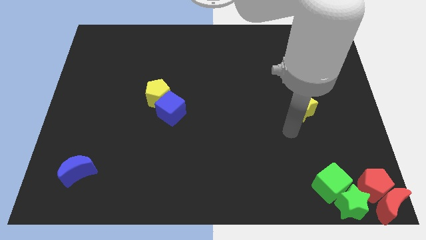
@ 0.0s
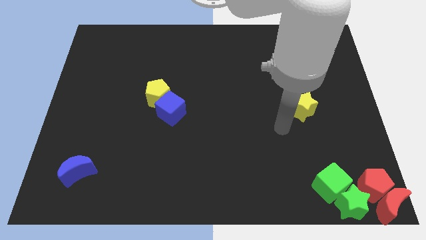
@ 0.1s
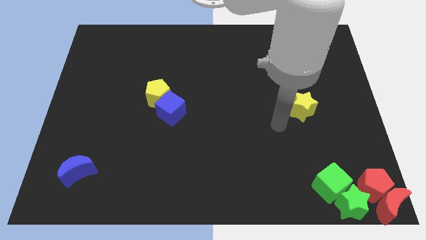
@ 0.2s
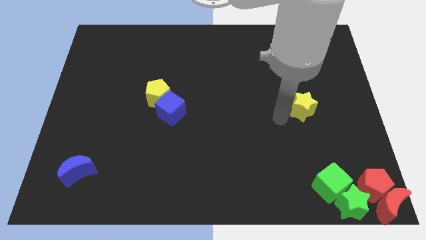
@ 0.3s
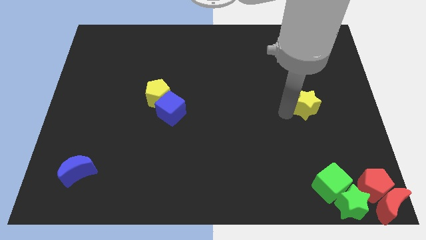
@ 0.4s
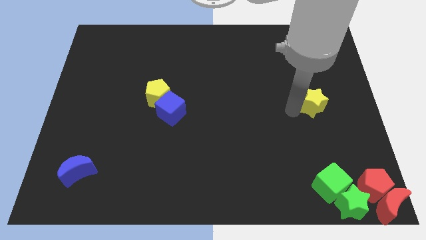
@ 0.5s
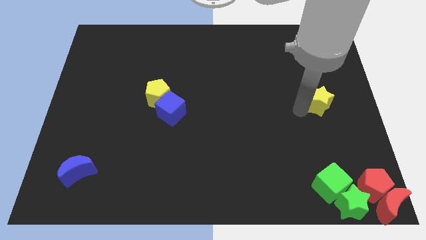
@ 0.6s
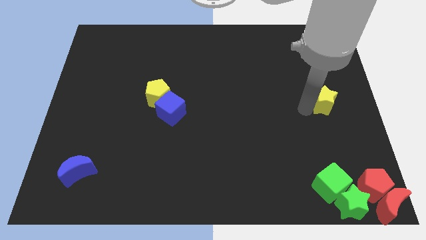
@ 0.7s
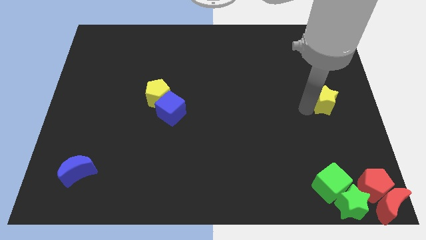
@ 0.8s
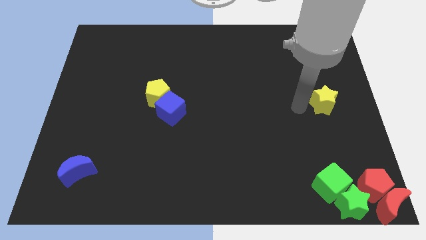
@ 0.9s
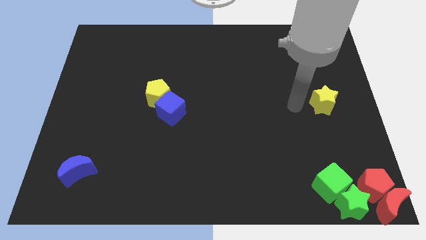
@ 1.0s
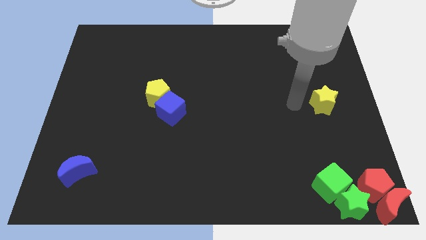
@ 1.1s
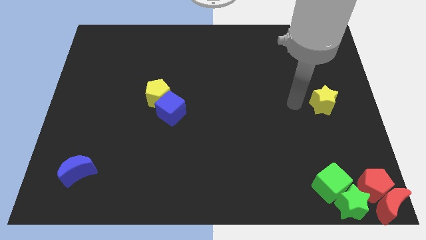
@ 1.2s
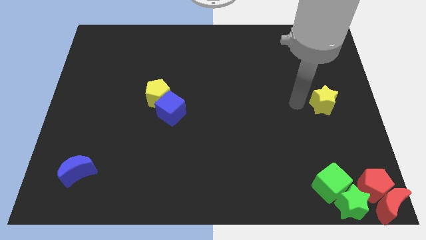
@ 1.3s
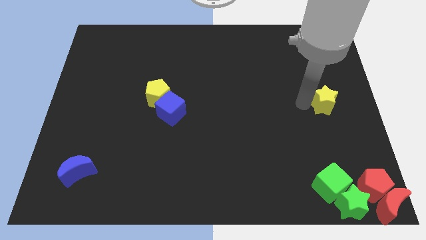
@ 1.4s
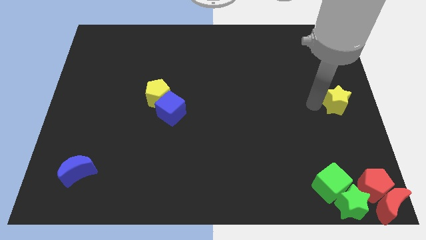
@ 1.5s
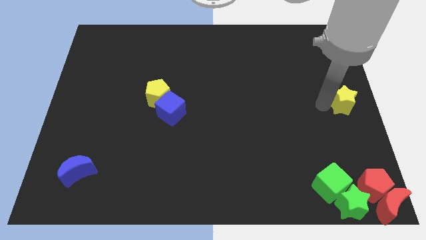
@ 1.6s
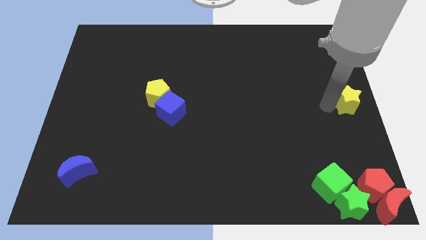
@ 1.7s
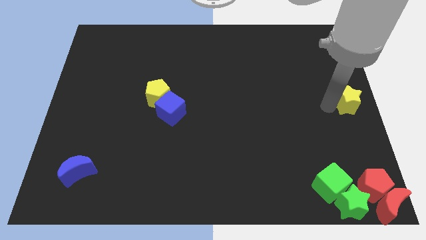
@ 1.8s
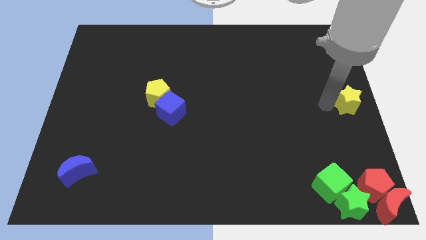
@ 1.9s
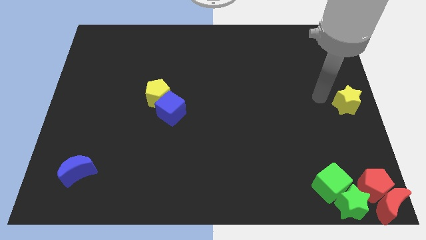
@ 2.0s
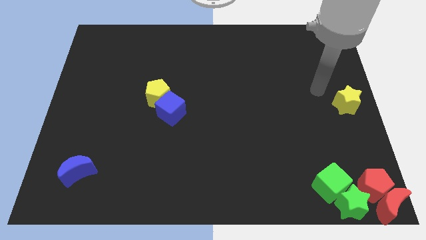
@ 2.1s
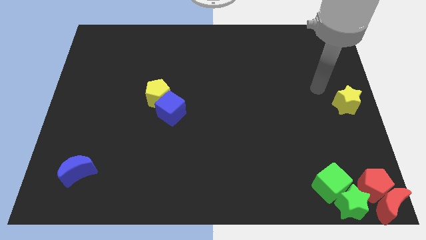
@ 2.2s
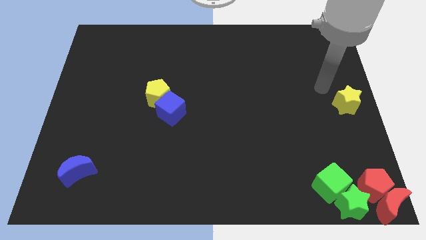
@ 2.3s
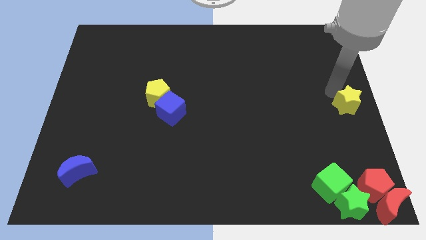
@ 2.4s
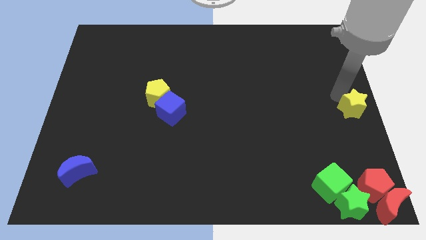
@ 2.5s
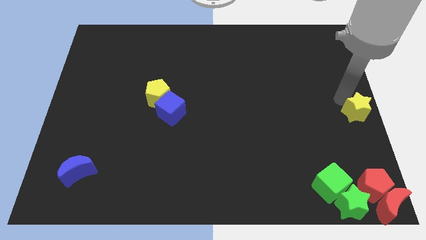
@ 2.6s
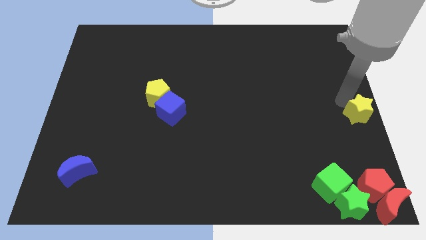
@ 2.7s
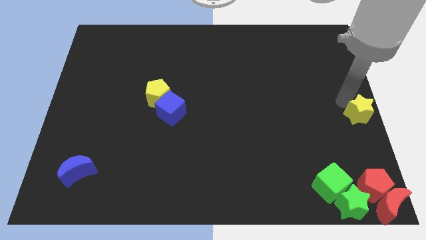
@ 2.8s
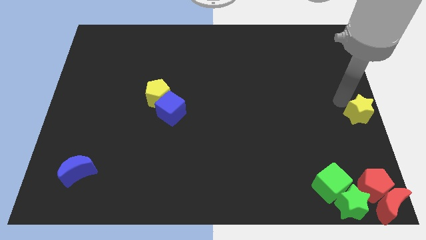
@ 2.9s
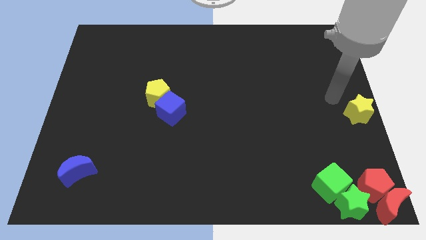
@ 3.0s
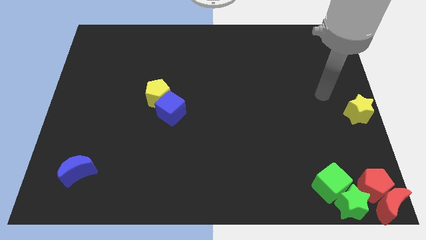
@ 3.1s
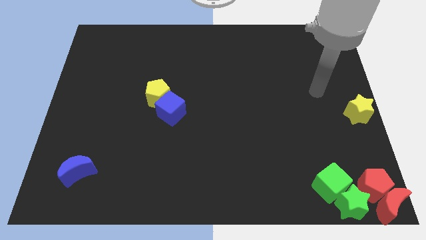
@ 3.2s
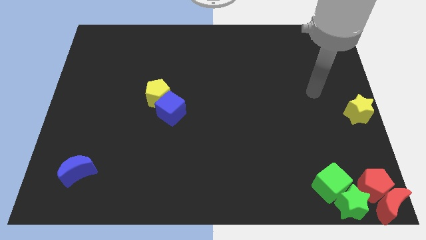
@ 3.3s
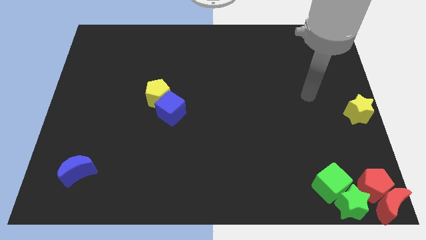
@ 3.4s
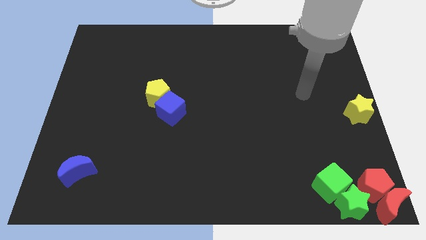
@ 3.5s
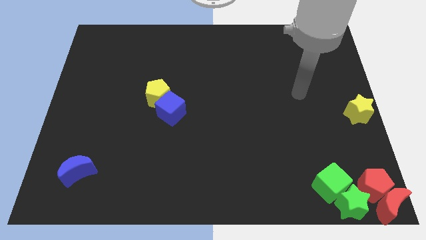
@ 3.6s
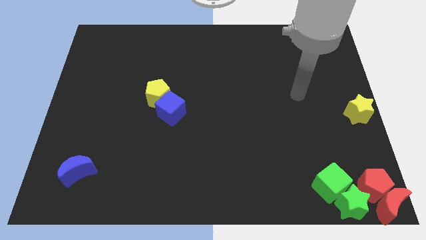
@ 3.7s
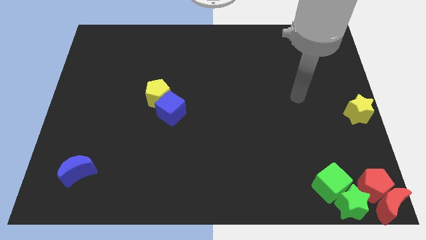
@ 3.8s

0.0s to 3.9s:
move the yellow star towards the center right side of the board

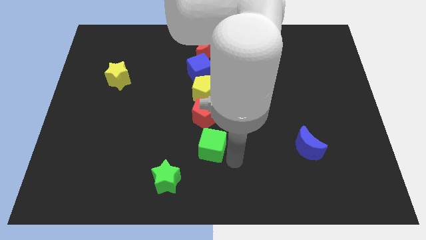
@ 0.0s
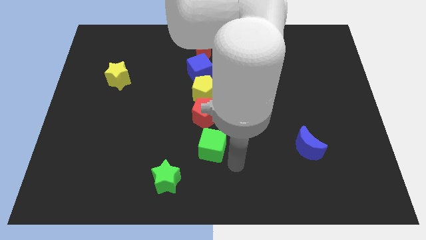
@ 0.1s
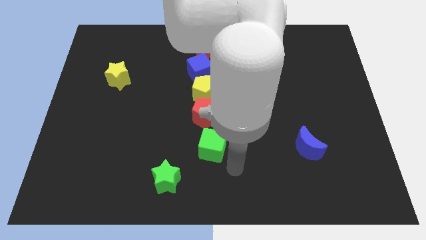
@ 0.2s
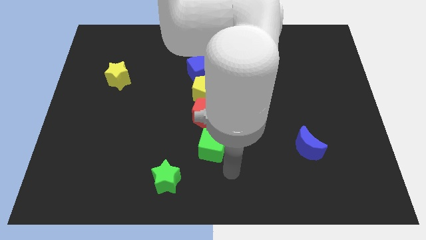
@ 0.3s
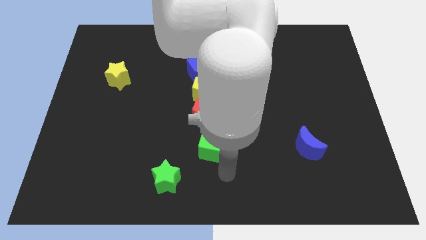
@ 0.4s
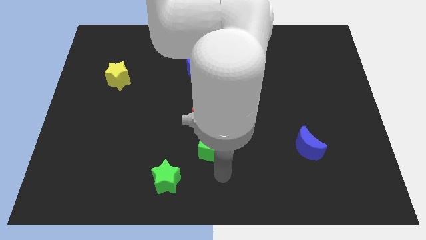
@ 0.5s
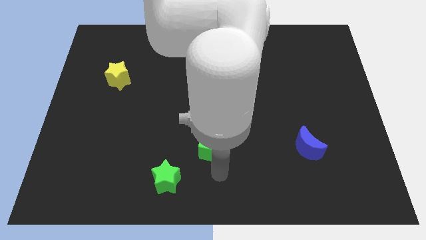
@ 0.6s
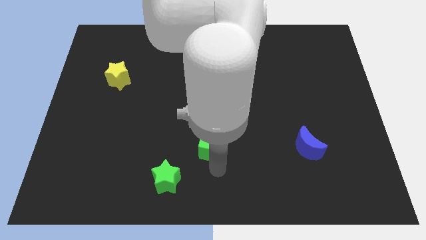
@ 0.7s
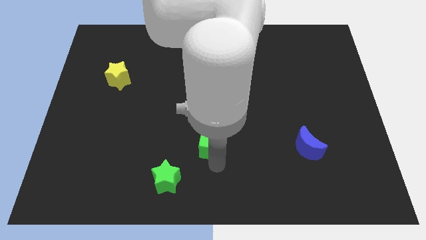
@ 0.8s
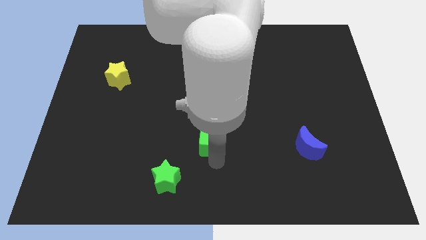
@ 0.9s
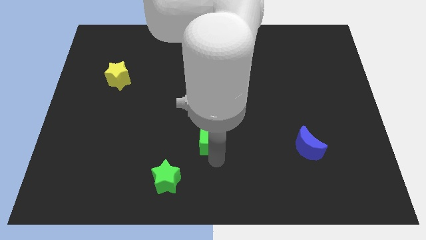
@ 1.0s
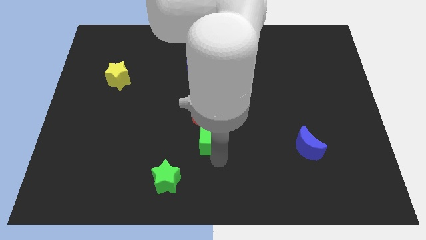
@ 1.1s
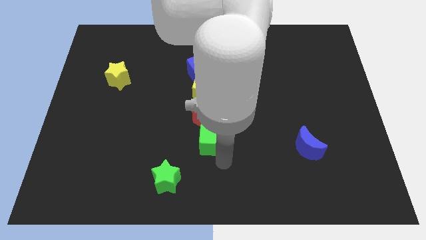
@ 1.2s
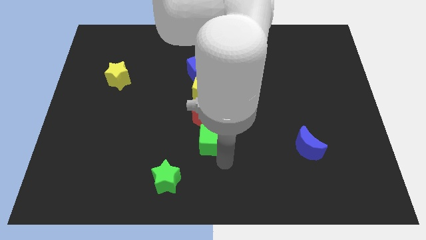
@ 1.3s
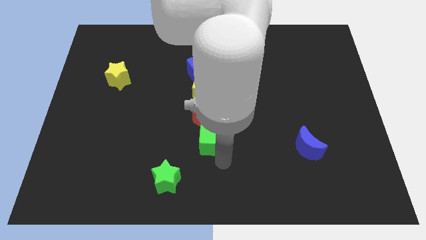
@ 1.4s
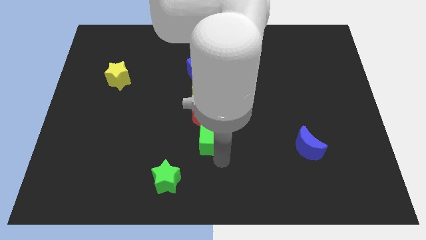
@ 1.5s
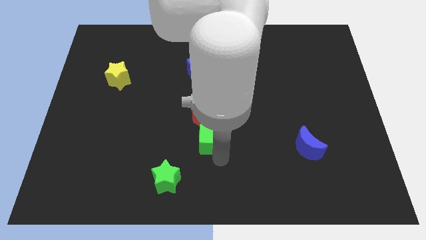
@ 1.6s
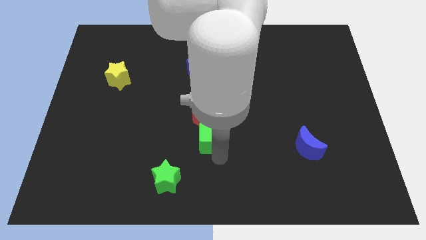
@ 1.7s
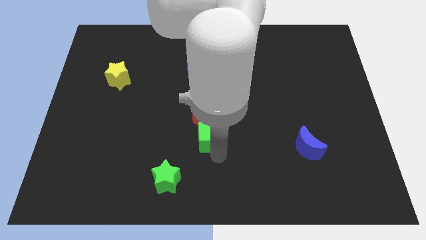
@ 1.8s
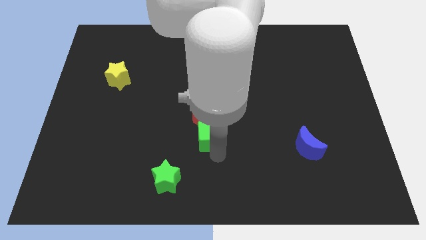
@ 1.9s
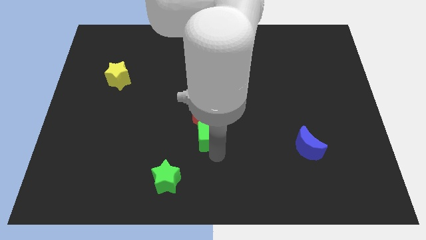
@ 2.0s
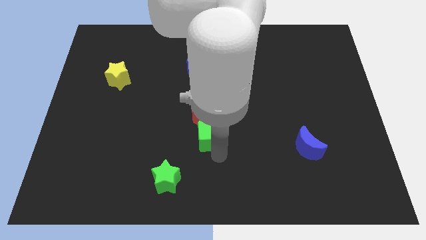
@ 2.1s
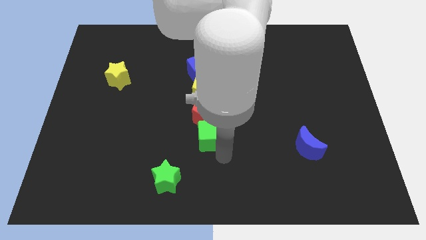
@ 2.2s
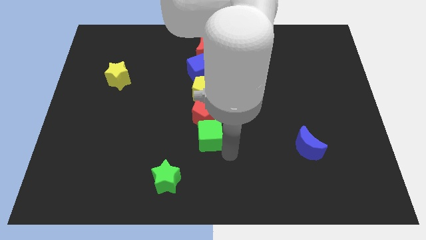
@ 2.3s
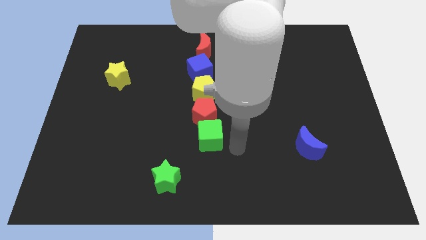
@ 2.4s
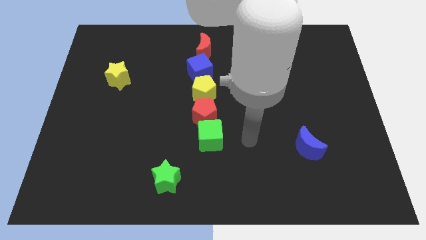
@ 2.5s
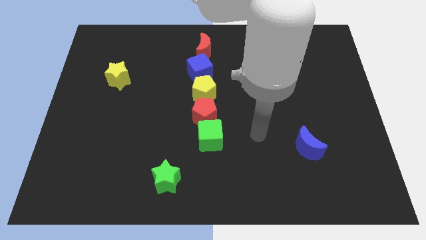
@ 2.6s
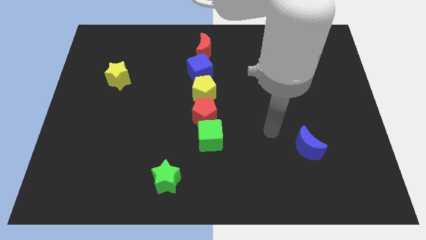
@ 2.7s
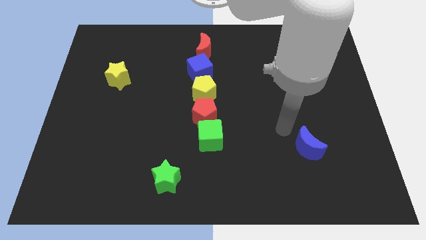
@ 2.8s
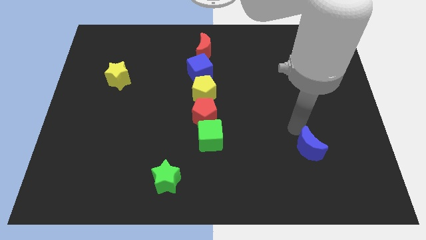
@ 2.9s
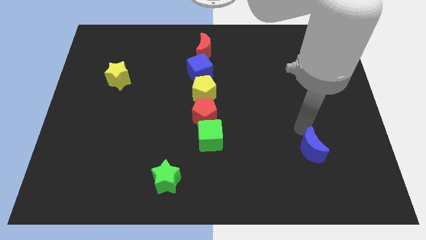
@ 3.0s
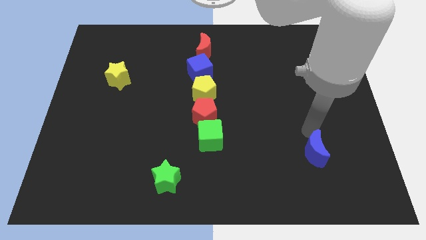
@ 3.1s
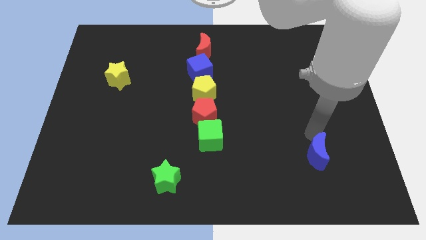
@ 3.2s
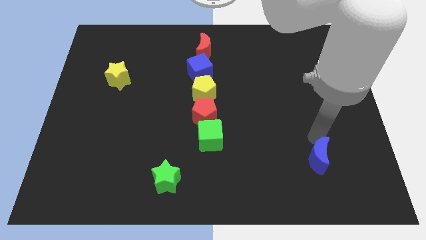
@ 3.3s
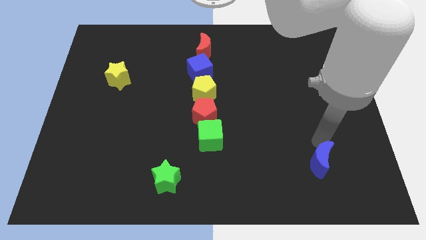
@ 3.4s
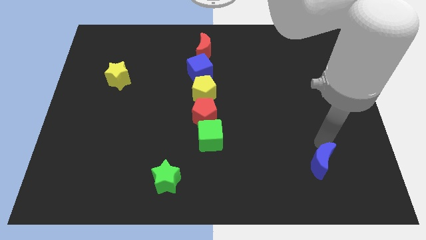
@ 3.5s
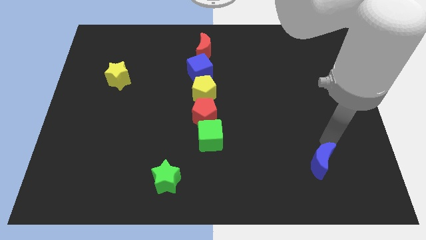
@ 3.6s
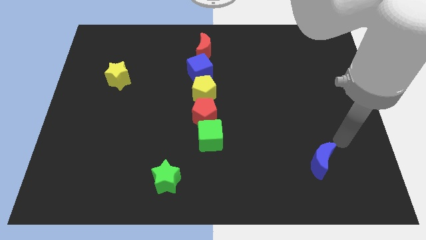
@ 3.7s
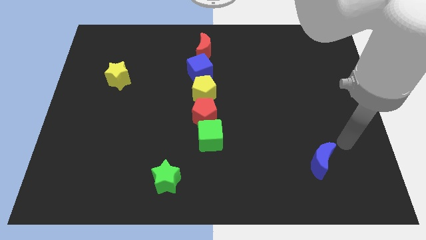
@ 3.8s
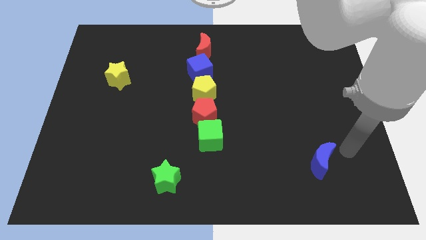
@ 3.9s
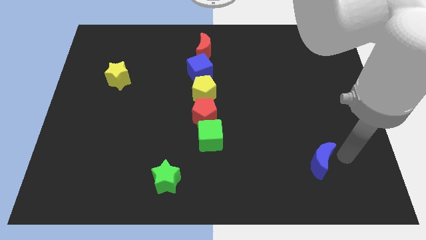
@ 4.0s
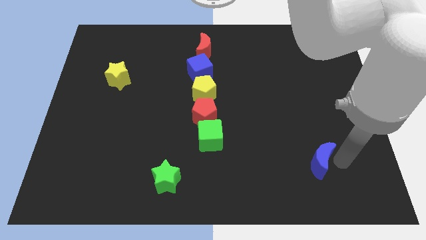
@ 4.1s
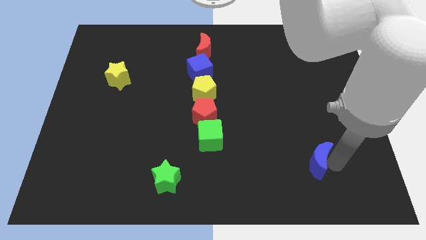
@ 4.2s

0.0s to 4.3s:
push the green cube close to the red pentagon

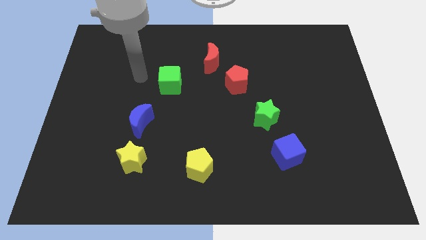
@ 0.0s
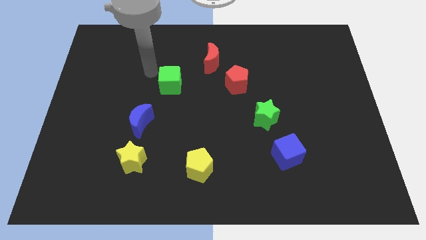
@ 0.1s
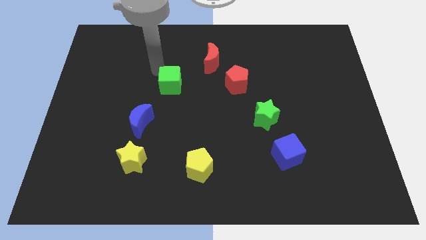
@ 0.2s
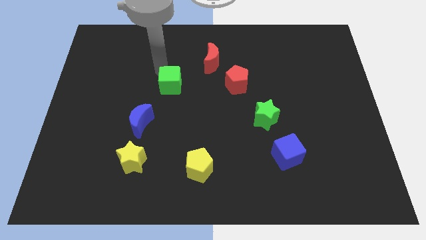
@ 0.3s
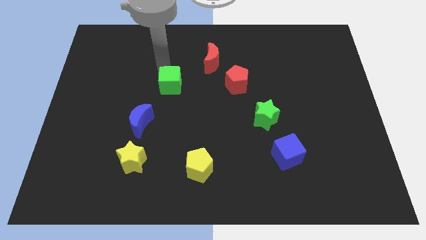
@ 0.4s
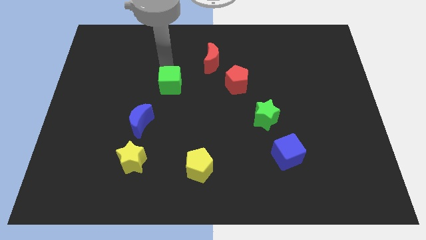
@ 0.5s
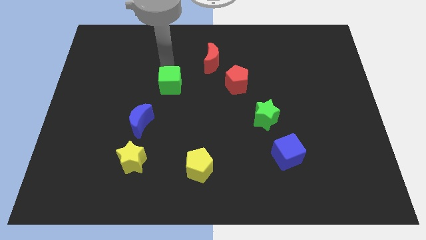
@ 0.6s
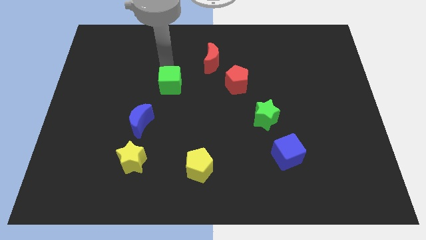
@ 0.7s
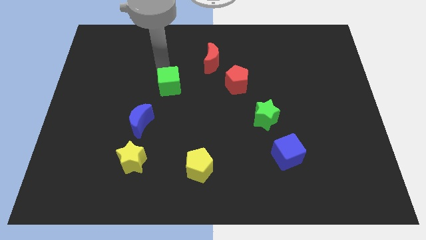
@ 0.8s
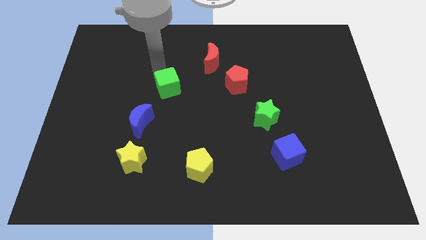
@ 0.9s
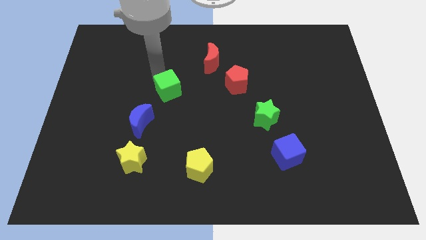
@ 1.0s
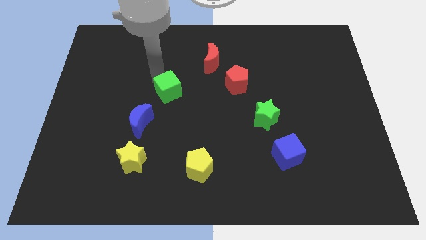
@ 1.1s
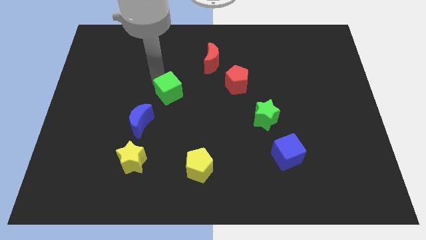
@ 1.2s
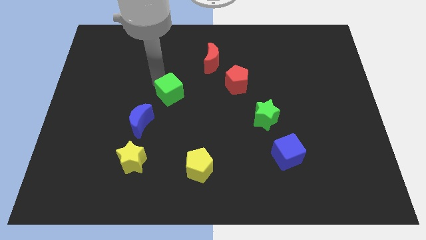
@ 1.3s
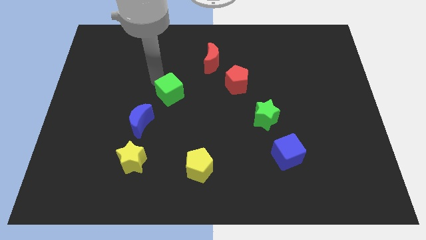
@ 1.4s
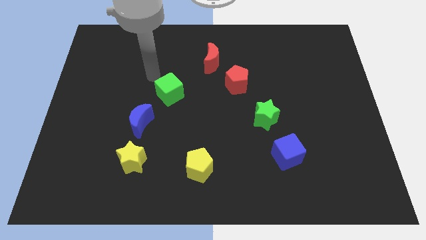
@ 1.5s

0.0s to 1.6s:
push the green cube slightly to the bottom right
